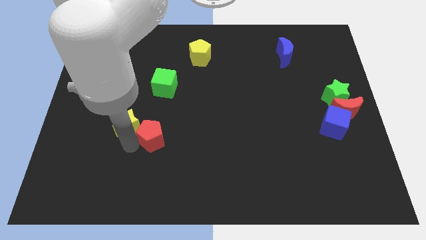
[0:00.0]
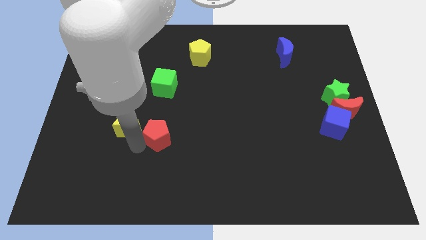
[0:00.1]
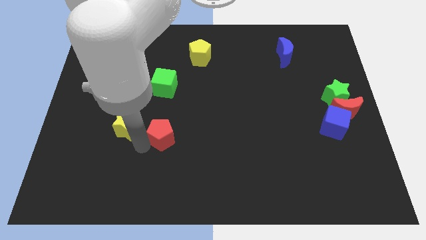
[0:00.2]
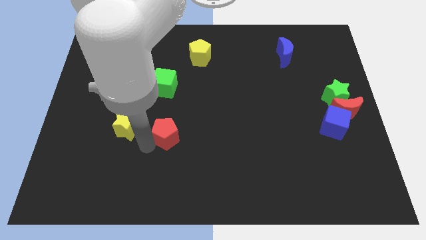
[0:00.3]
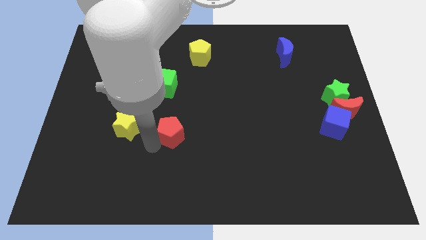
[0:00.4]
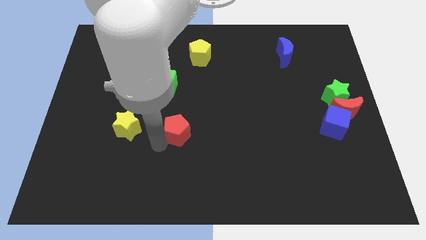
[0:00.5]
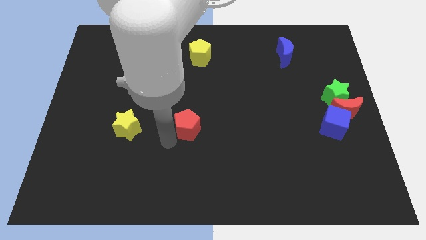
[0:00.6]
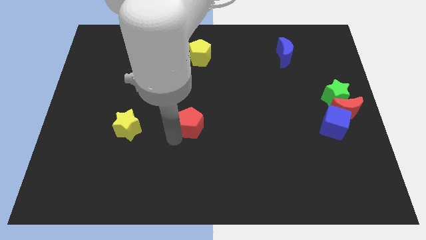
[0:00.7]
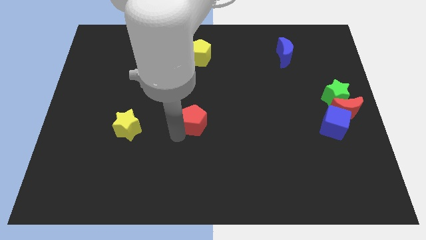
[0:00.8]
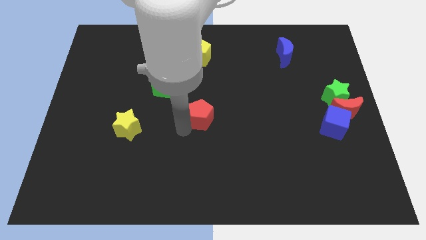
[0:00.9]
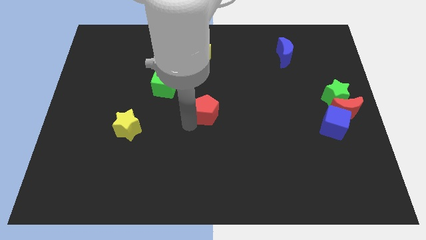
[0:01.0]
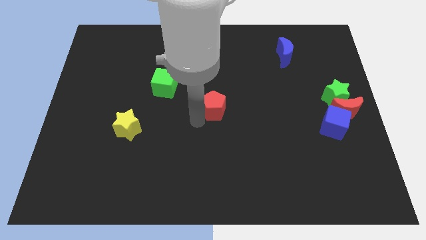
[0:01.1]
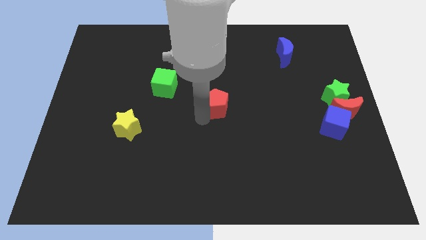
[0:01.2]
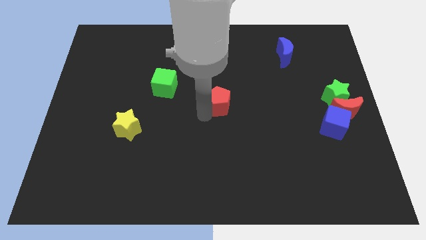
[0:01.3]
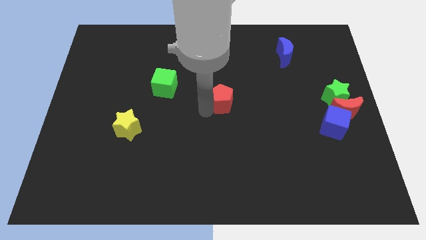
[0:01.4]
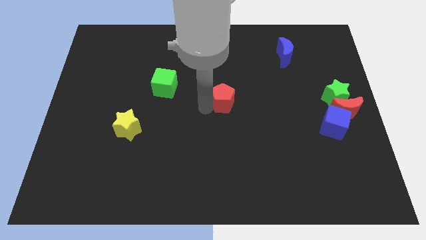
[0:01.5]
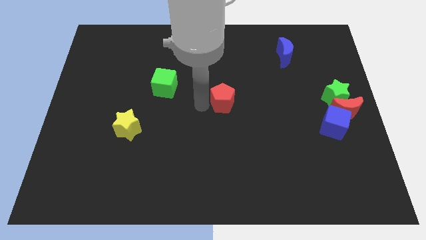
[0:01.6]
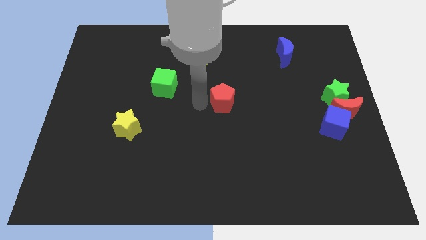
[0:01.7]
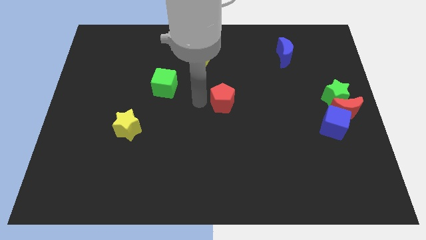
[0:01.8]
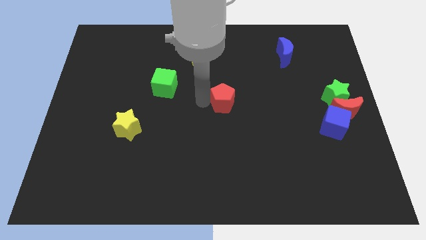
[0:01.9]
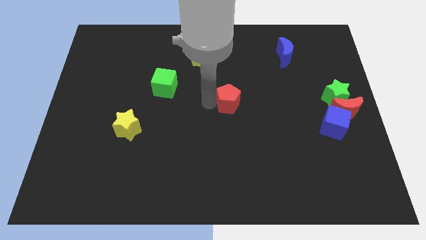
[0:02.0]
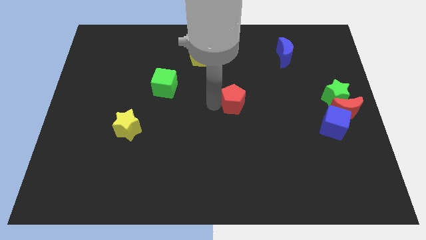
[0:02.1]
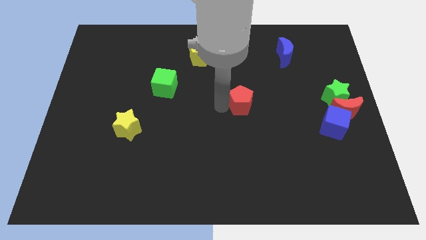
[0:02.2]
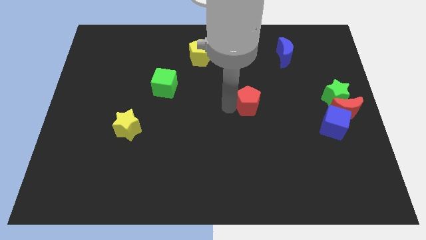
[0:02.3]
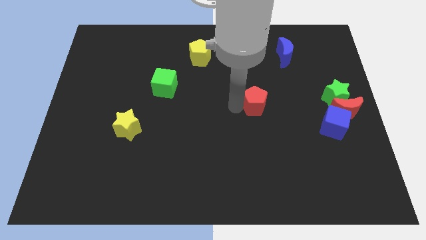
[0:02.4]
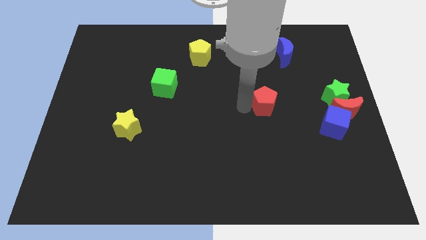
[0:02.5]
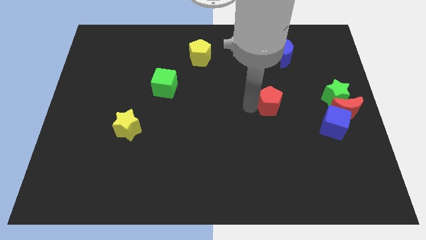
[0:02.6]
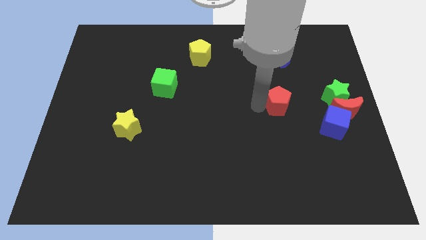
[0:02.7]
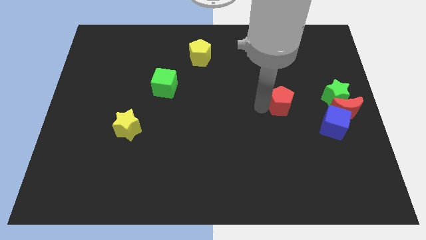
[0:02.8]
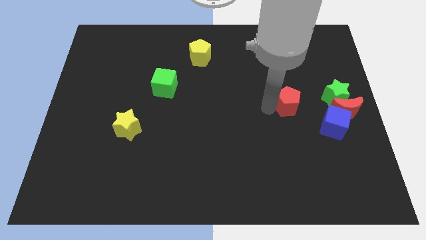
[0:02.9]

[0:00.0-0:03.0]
move the red pentagon to the left of the green star

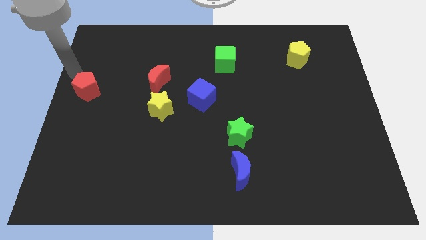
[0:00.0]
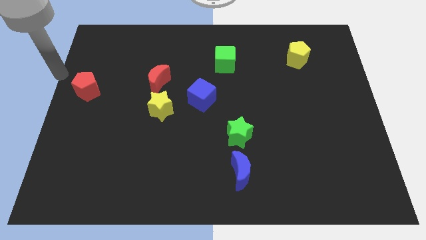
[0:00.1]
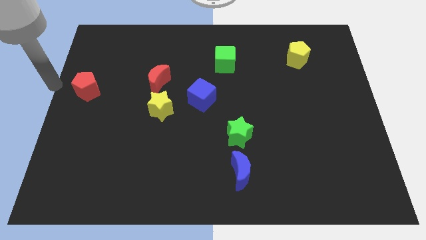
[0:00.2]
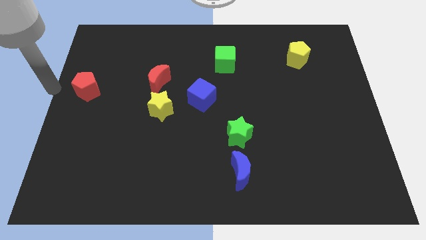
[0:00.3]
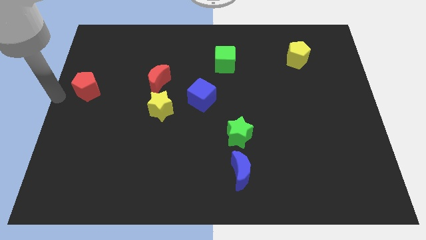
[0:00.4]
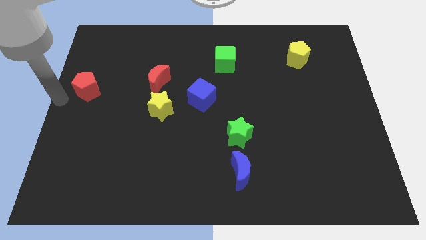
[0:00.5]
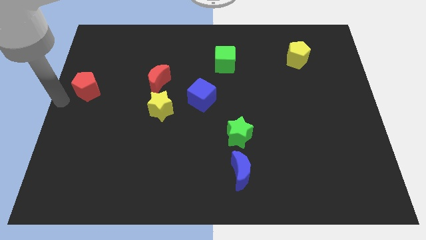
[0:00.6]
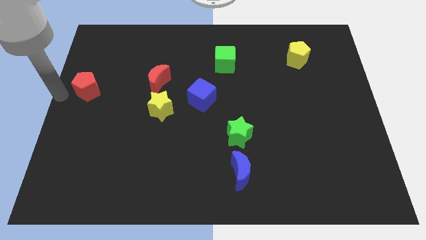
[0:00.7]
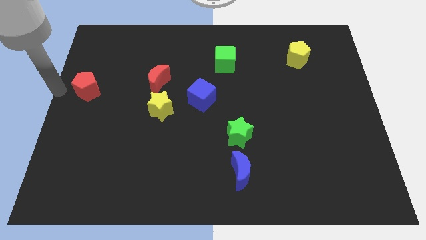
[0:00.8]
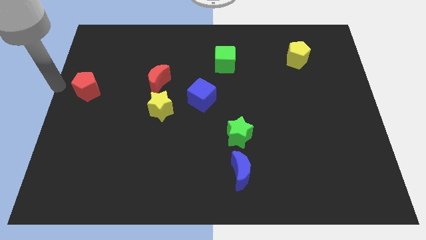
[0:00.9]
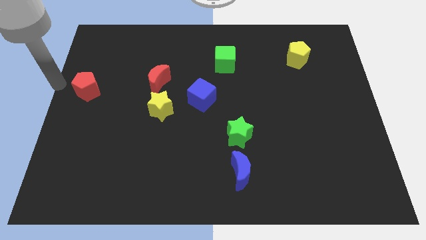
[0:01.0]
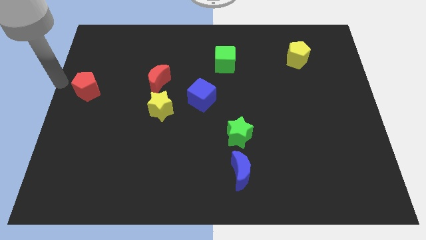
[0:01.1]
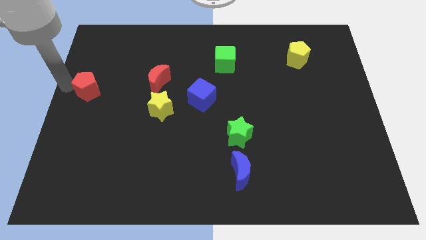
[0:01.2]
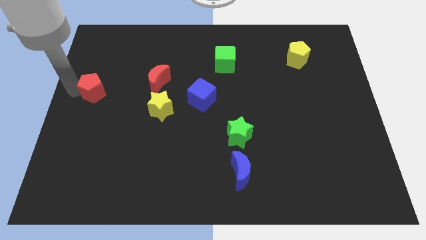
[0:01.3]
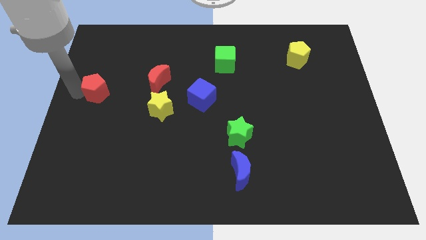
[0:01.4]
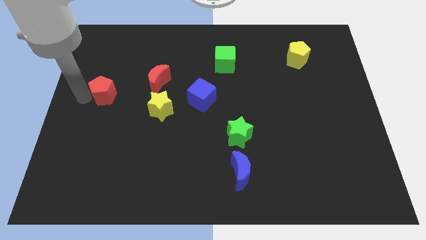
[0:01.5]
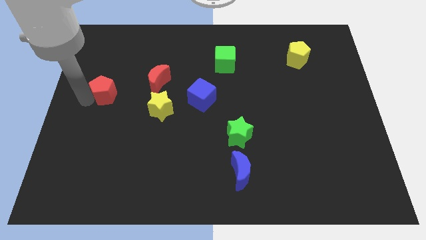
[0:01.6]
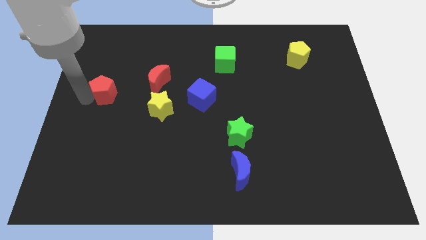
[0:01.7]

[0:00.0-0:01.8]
slide the red pentagon slightly to the right

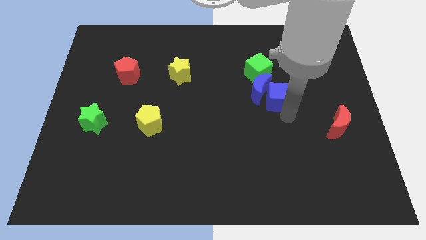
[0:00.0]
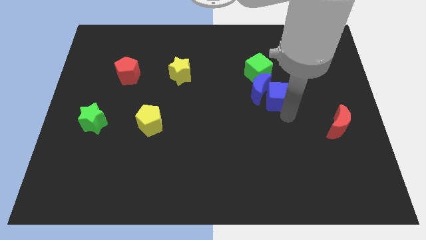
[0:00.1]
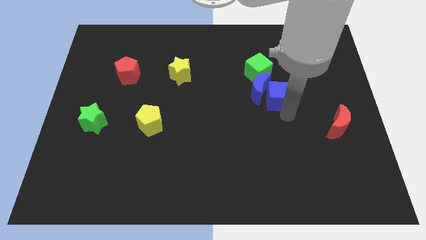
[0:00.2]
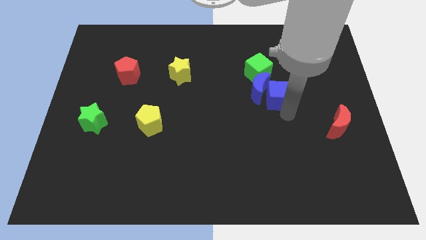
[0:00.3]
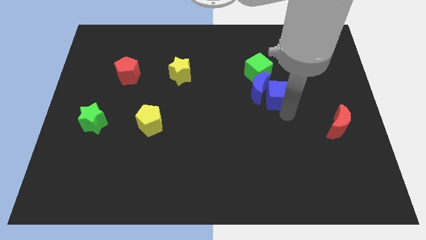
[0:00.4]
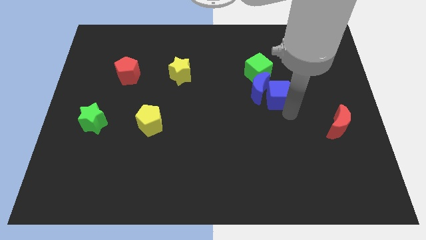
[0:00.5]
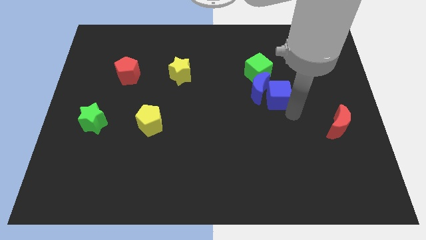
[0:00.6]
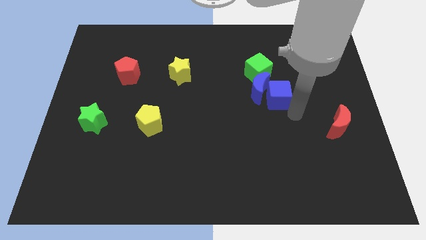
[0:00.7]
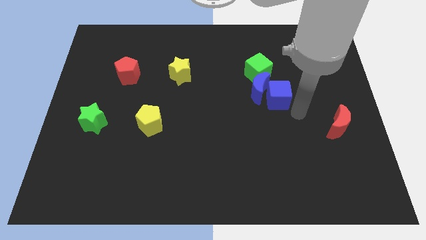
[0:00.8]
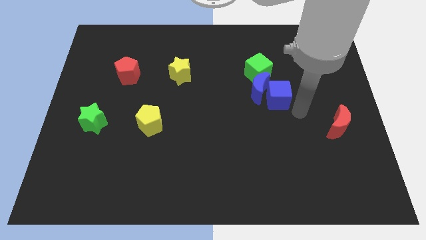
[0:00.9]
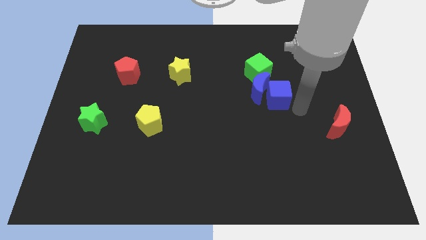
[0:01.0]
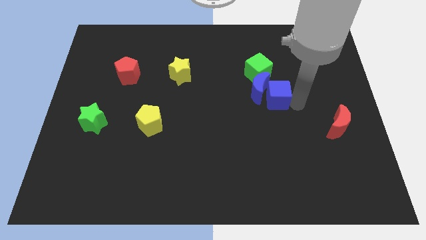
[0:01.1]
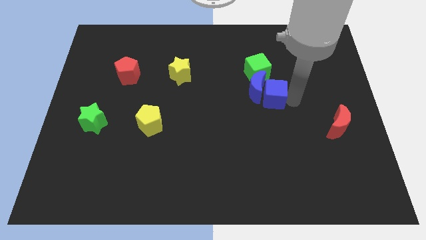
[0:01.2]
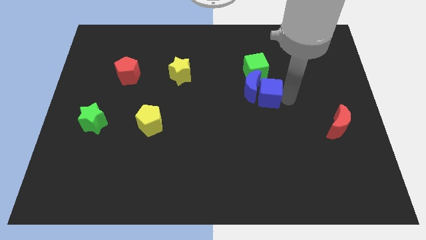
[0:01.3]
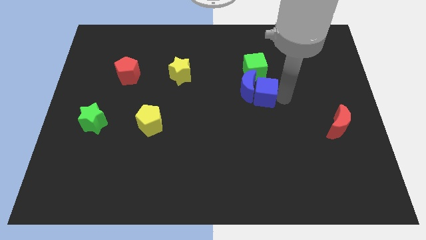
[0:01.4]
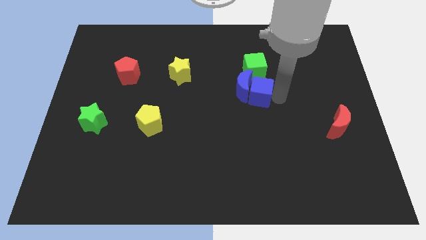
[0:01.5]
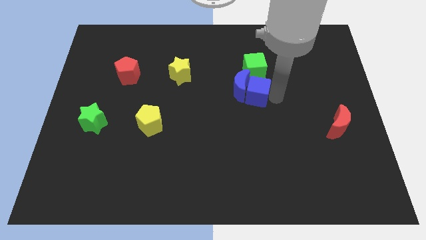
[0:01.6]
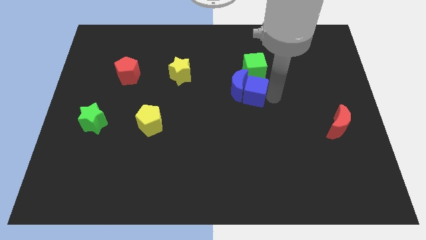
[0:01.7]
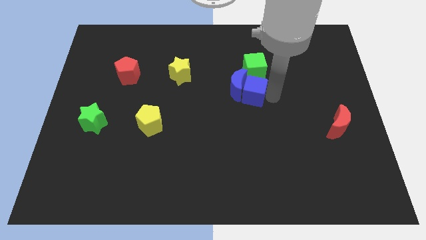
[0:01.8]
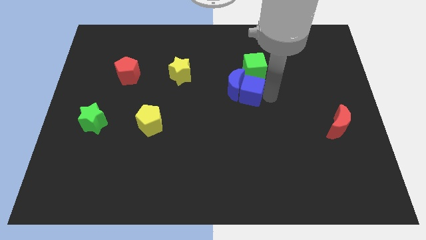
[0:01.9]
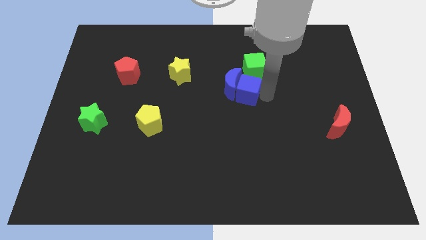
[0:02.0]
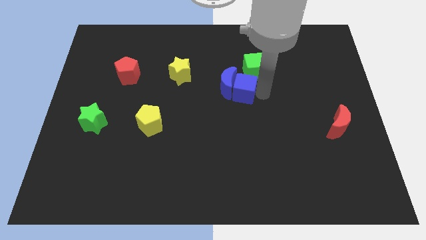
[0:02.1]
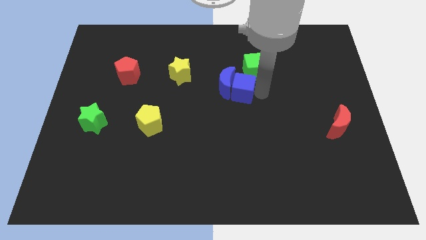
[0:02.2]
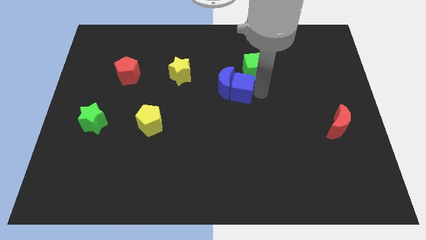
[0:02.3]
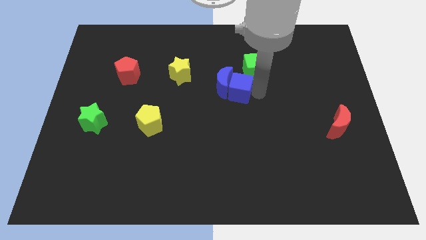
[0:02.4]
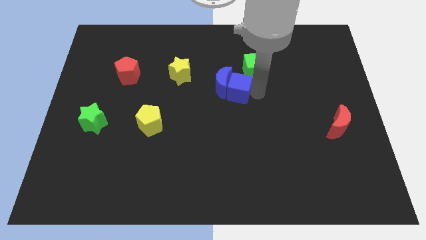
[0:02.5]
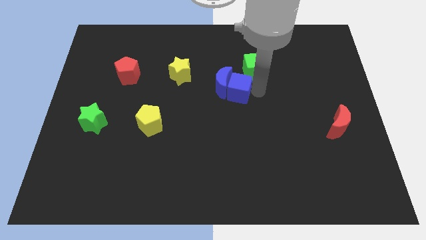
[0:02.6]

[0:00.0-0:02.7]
push blue blocks and green cube towards the center of the board

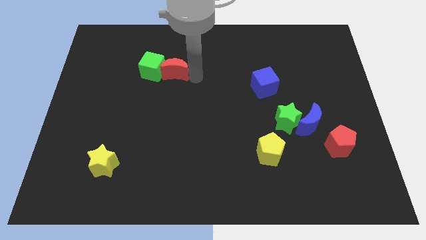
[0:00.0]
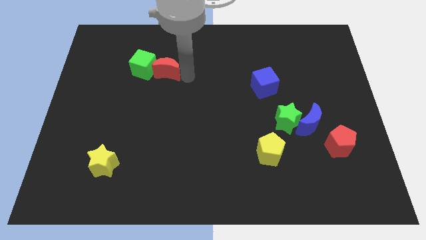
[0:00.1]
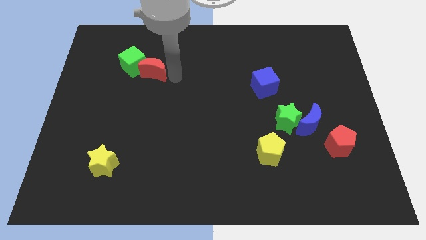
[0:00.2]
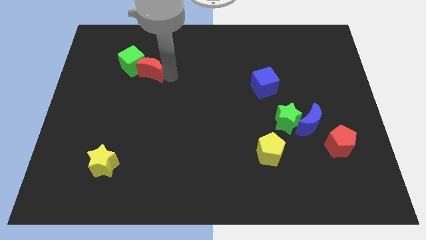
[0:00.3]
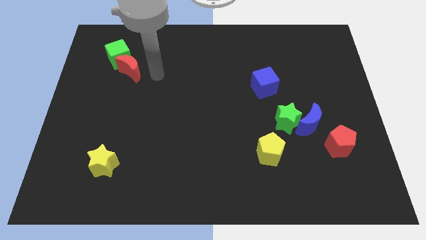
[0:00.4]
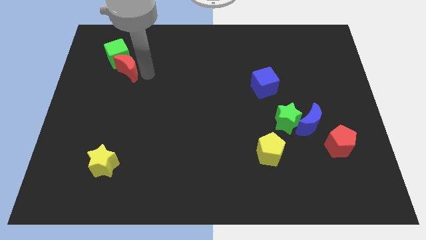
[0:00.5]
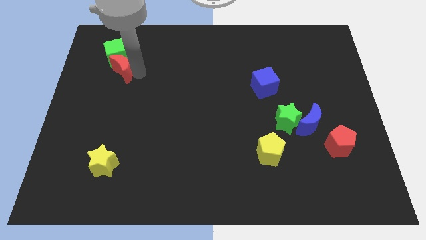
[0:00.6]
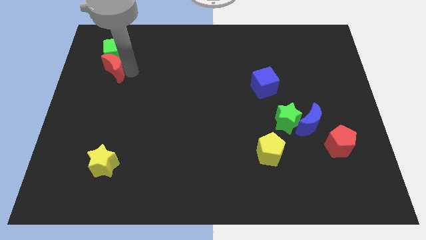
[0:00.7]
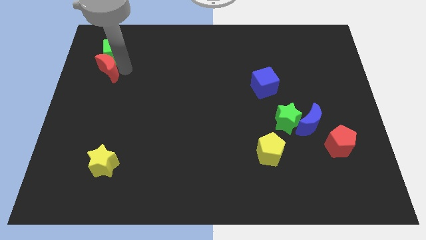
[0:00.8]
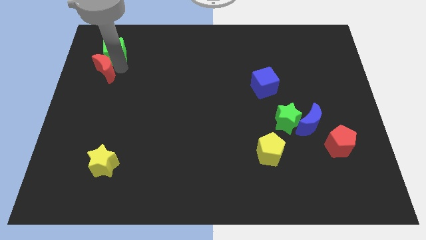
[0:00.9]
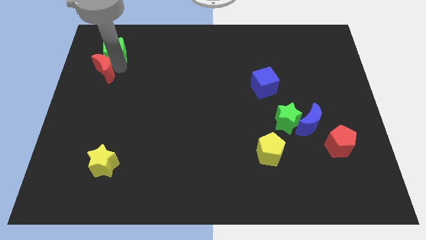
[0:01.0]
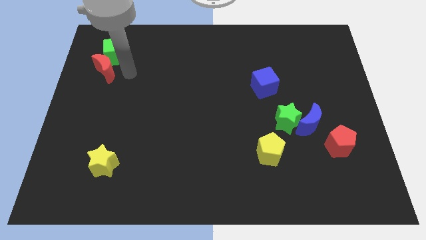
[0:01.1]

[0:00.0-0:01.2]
move the green cube and red moon towards the top left

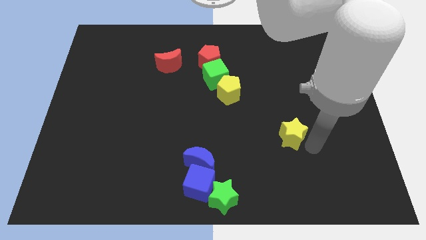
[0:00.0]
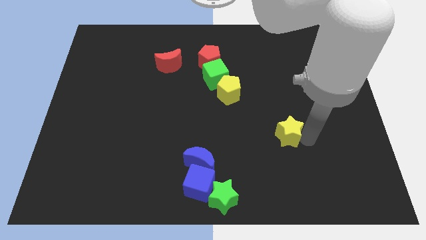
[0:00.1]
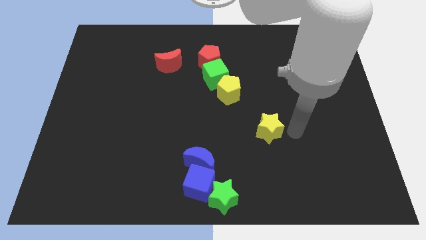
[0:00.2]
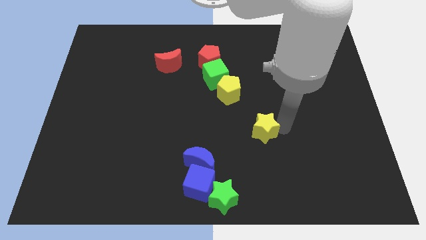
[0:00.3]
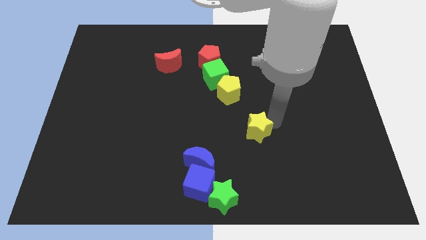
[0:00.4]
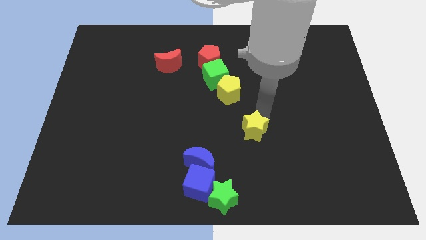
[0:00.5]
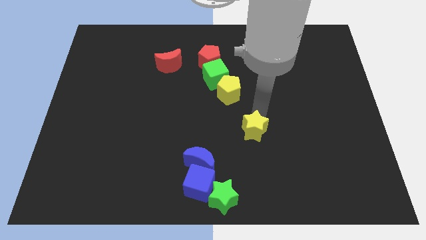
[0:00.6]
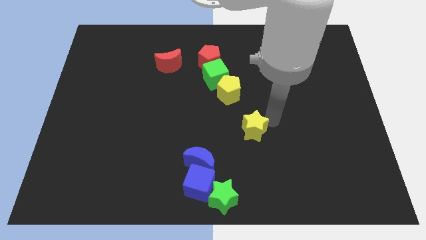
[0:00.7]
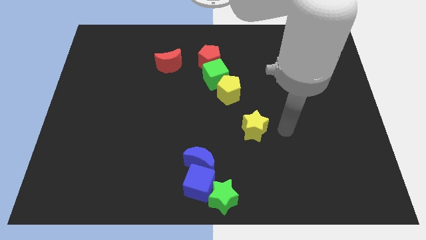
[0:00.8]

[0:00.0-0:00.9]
push the yellow star towards the yellow pentagon
